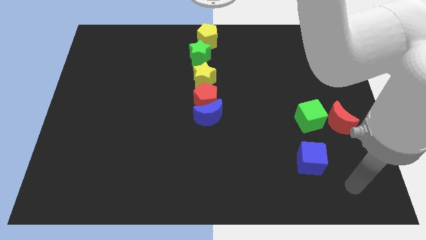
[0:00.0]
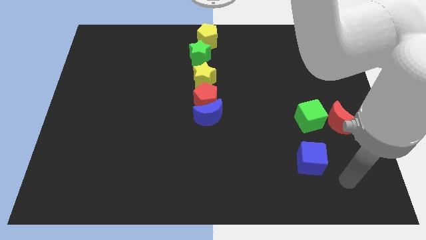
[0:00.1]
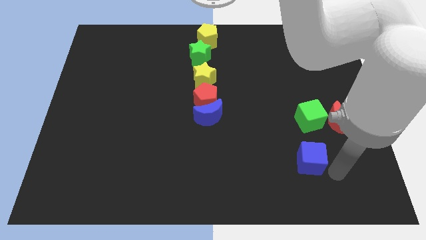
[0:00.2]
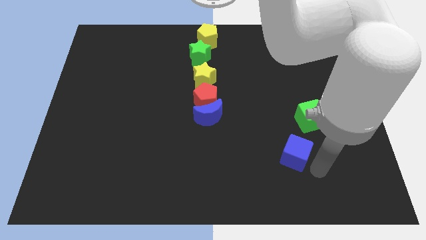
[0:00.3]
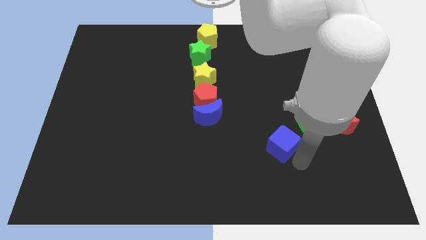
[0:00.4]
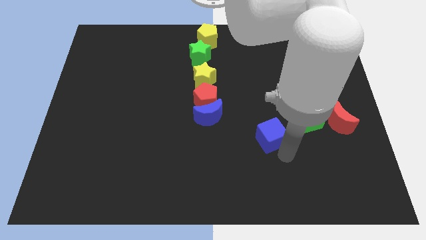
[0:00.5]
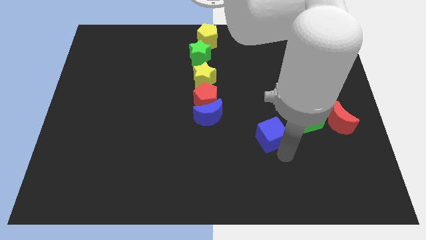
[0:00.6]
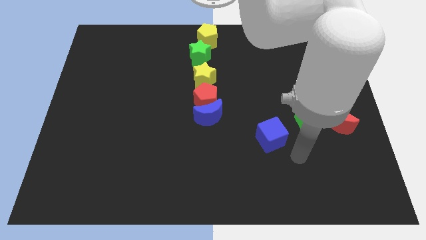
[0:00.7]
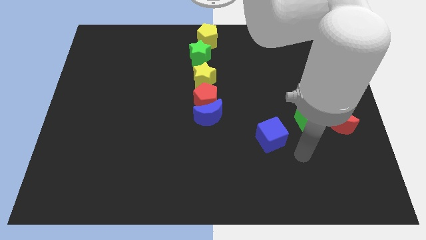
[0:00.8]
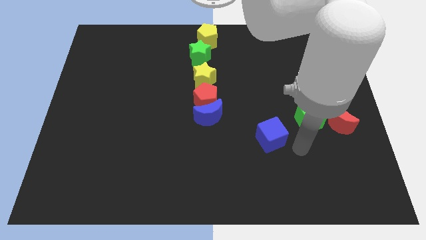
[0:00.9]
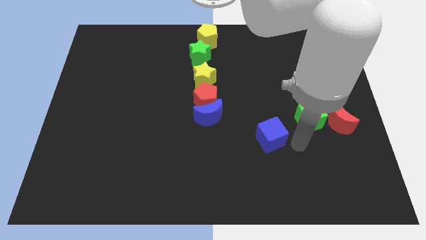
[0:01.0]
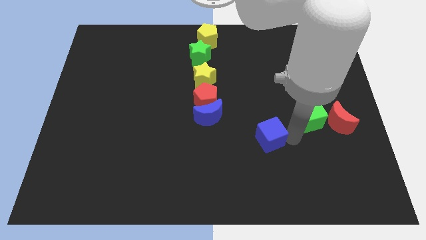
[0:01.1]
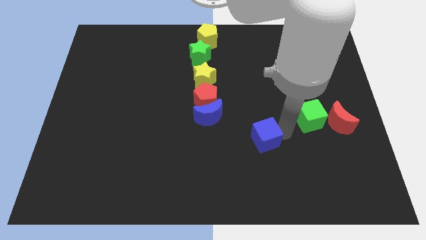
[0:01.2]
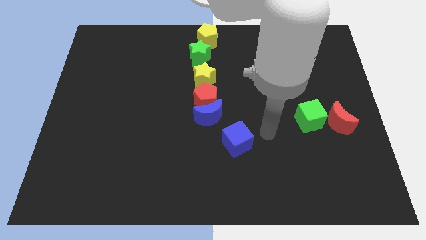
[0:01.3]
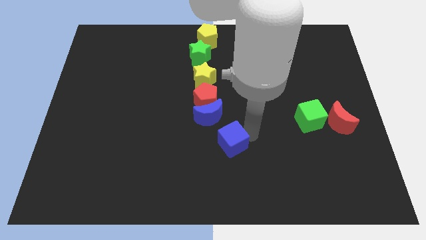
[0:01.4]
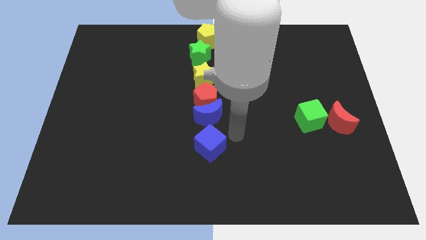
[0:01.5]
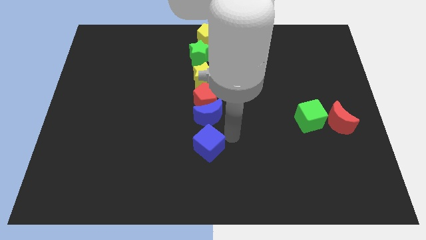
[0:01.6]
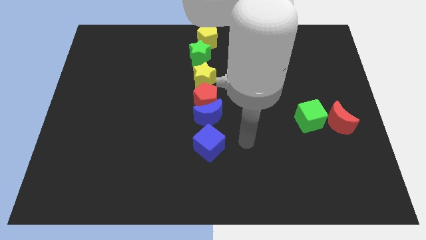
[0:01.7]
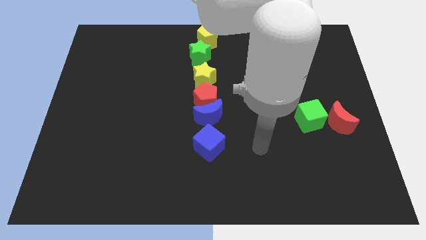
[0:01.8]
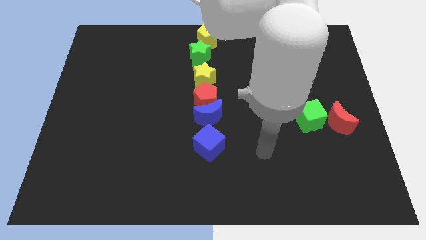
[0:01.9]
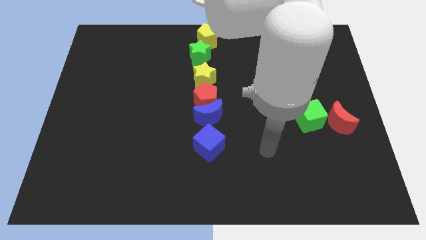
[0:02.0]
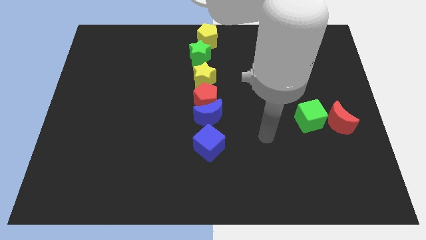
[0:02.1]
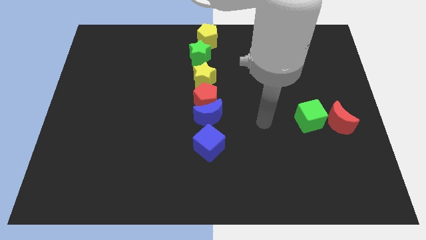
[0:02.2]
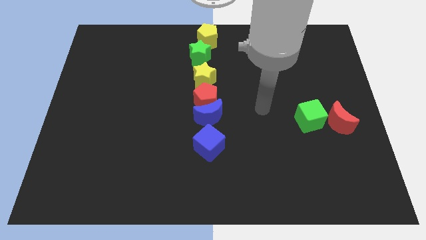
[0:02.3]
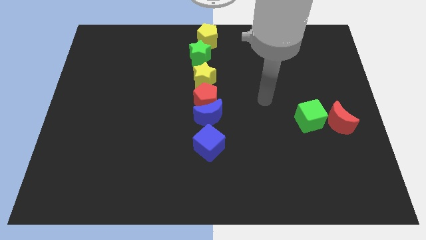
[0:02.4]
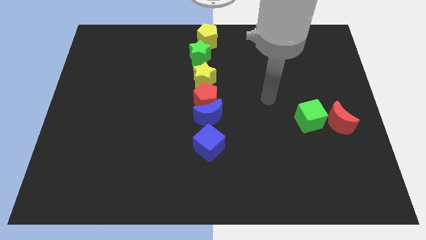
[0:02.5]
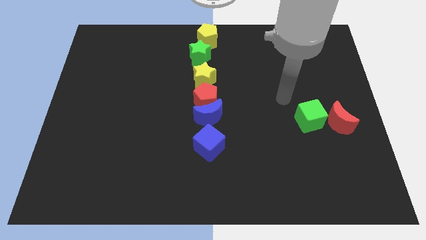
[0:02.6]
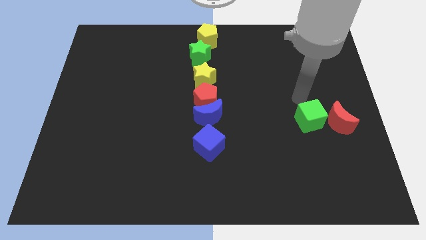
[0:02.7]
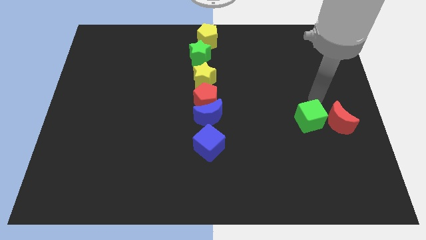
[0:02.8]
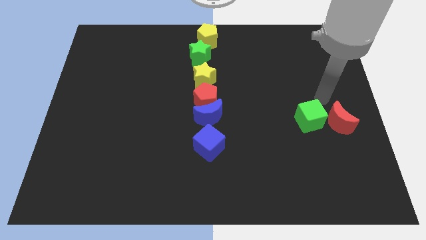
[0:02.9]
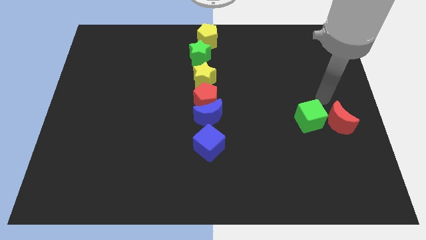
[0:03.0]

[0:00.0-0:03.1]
place the blue cube below the blue crescent

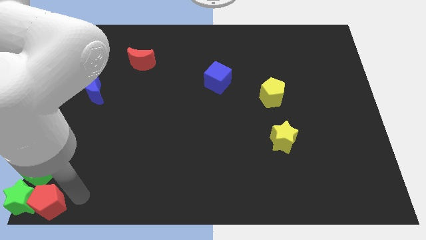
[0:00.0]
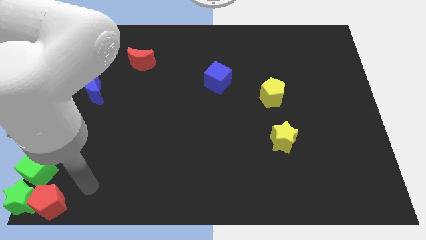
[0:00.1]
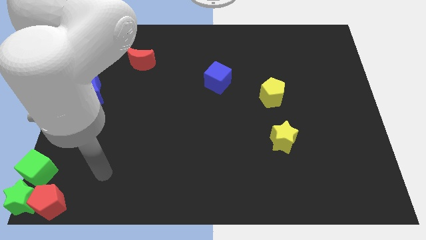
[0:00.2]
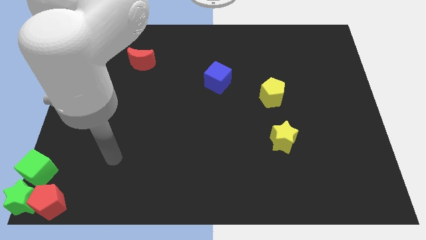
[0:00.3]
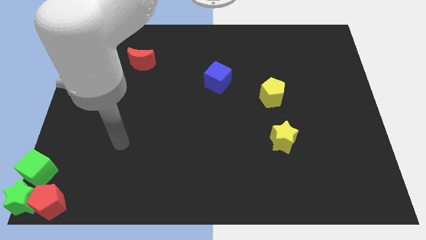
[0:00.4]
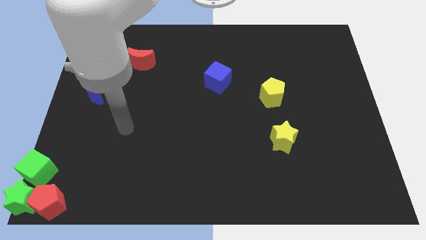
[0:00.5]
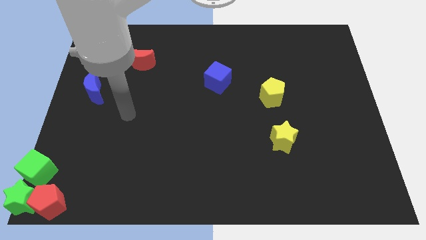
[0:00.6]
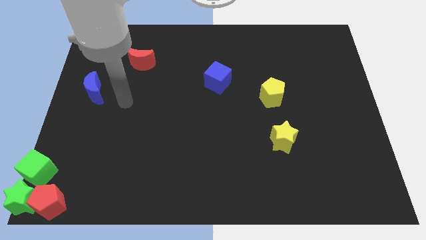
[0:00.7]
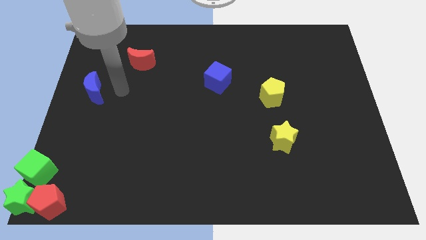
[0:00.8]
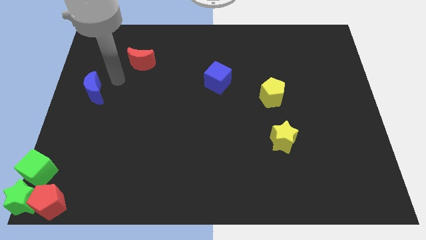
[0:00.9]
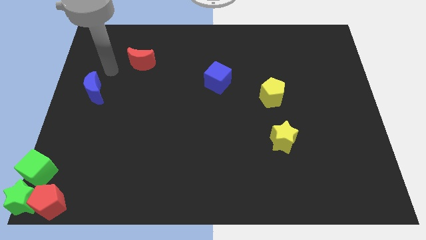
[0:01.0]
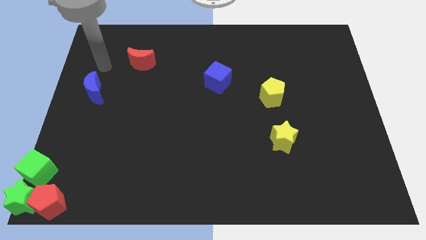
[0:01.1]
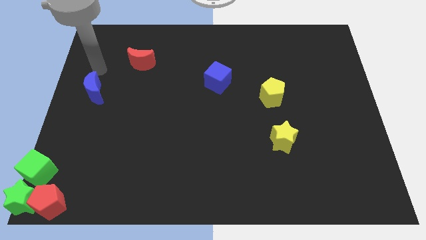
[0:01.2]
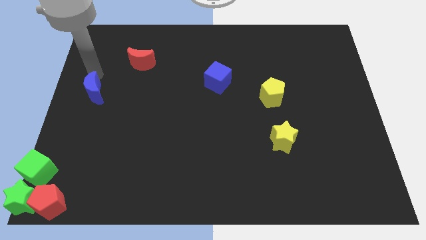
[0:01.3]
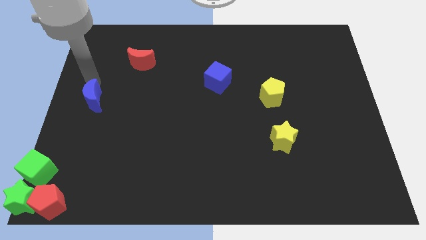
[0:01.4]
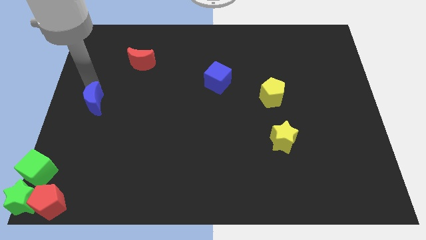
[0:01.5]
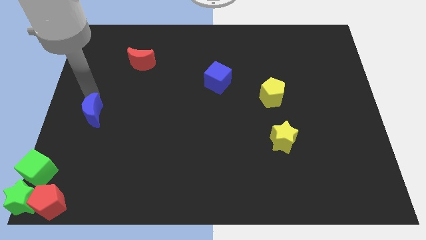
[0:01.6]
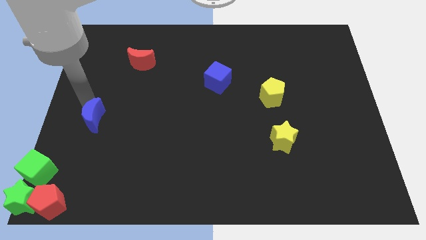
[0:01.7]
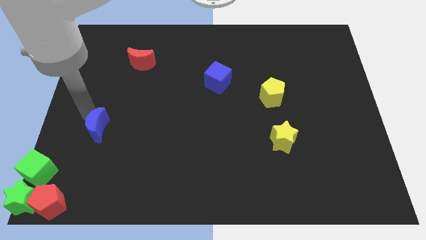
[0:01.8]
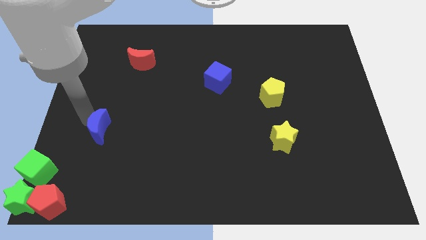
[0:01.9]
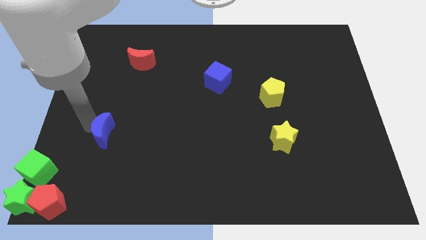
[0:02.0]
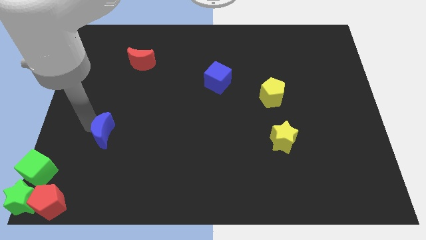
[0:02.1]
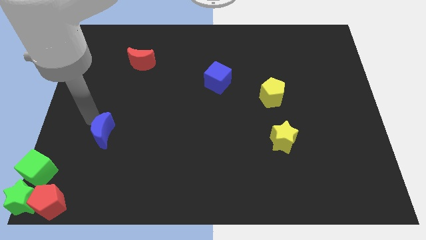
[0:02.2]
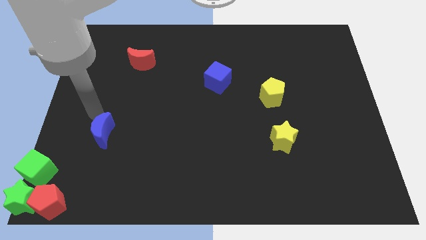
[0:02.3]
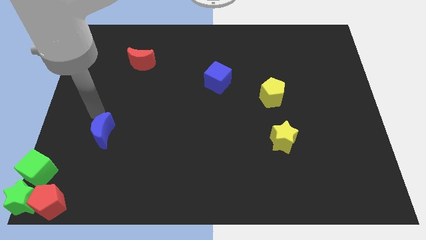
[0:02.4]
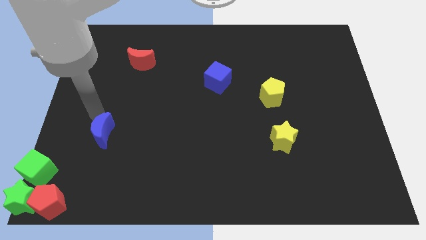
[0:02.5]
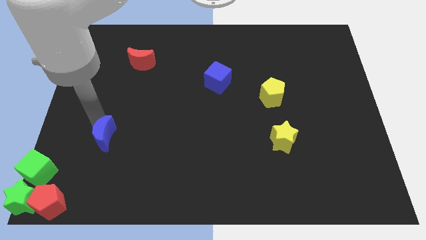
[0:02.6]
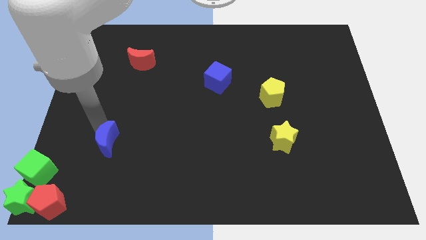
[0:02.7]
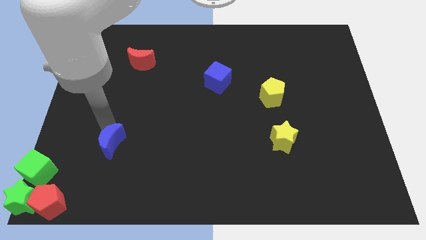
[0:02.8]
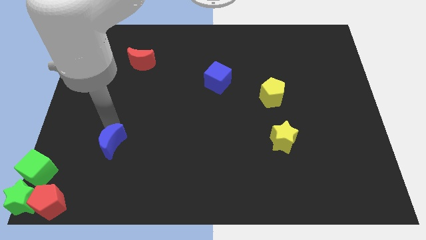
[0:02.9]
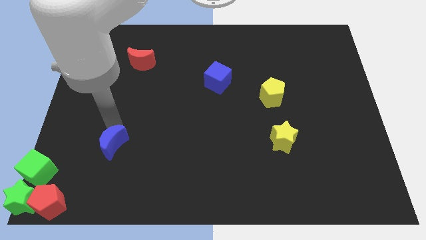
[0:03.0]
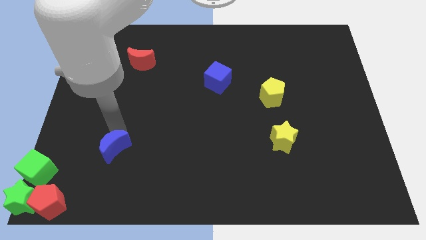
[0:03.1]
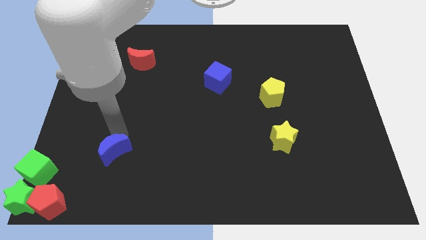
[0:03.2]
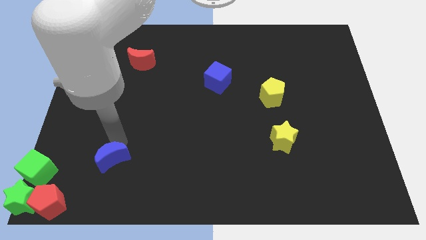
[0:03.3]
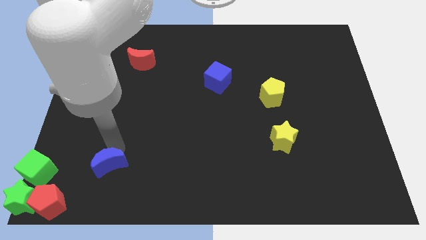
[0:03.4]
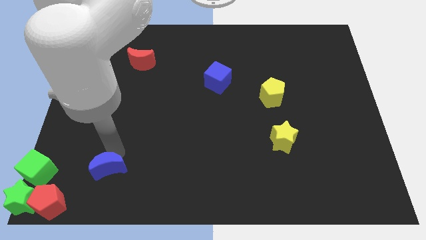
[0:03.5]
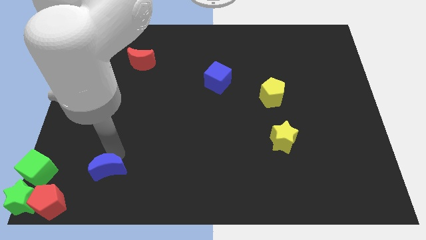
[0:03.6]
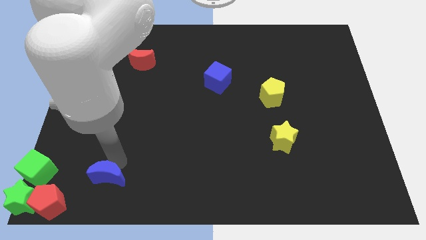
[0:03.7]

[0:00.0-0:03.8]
place the blue moon right to the green cube

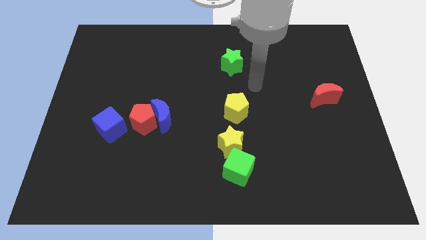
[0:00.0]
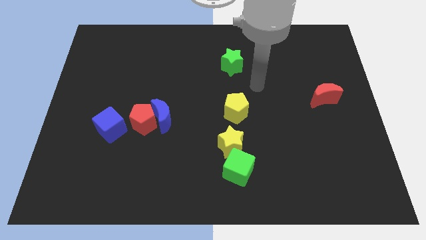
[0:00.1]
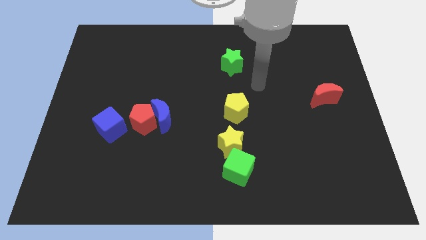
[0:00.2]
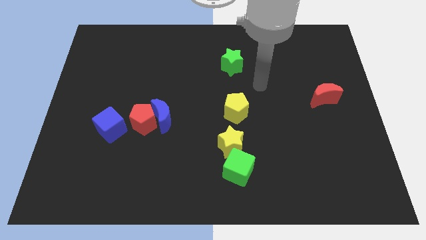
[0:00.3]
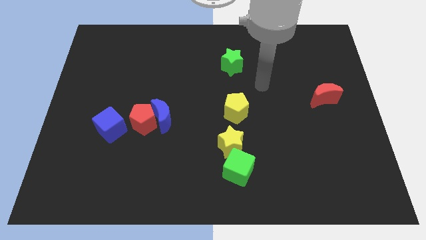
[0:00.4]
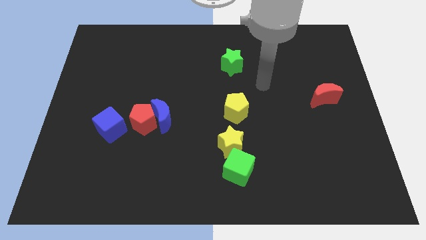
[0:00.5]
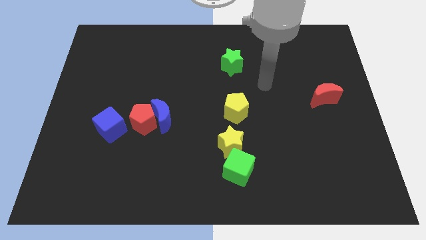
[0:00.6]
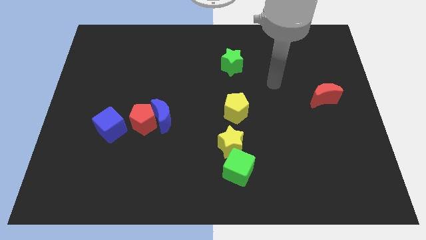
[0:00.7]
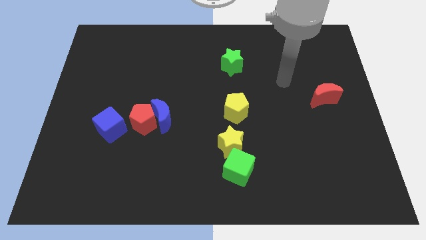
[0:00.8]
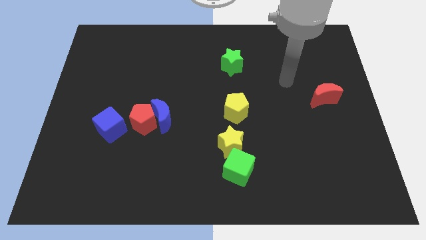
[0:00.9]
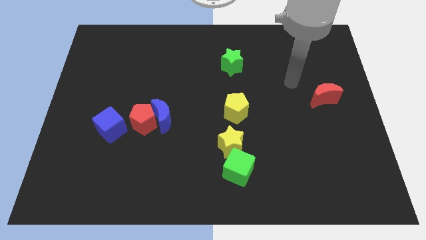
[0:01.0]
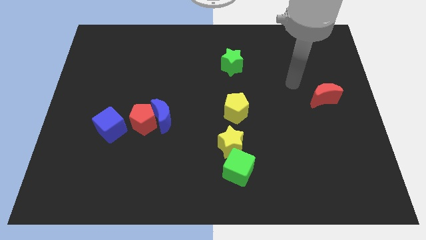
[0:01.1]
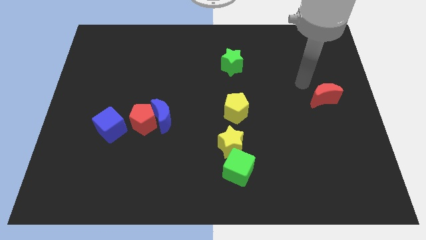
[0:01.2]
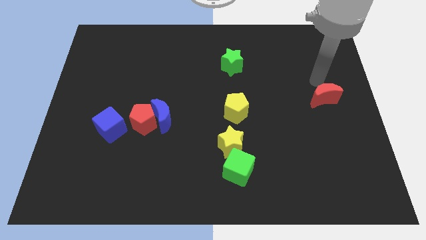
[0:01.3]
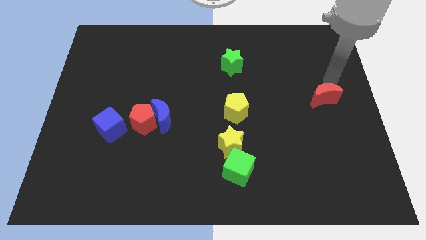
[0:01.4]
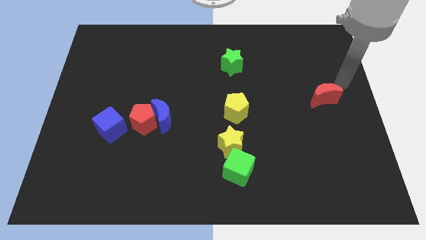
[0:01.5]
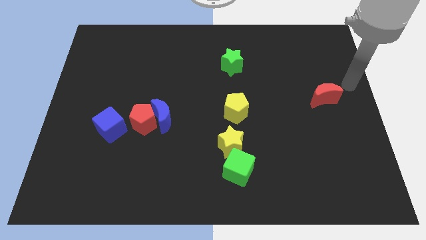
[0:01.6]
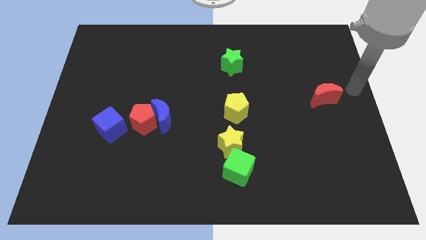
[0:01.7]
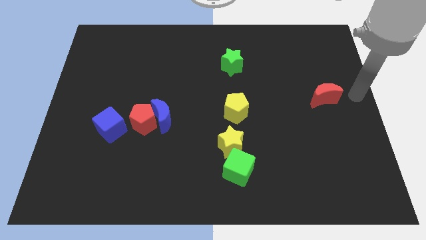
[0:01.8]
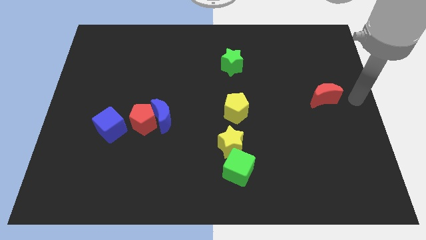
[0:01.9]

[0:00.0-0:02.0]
point your arm at the right side of the red moon
